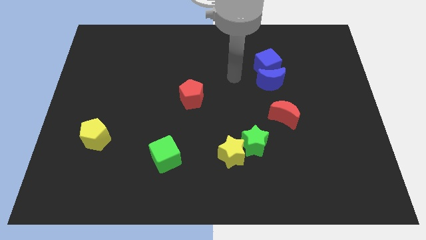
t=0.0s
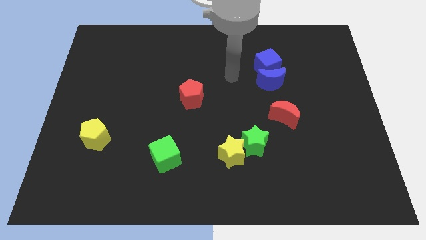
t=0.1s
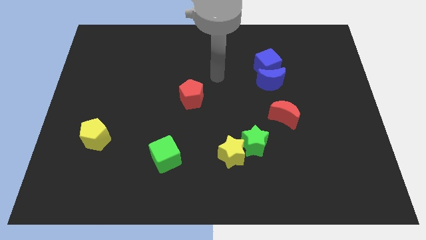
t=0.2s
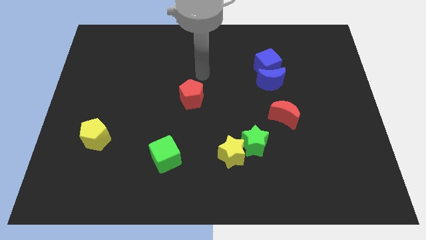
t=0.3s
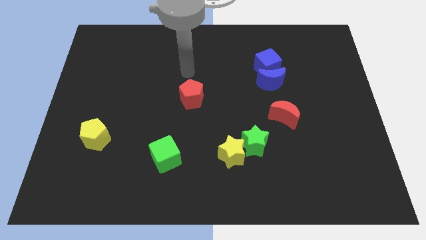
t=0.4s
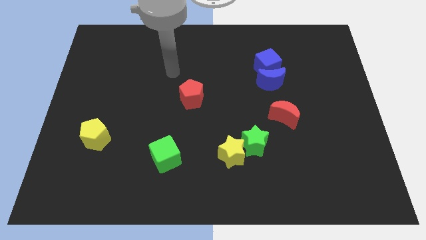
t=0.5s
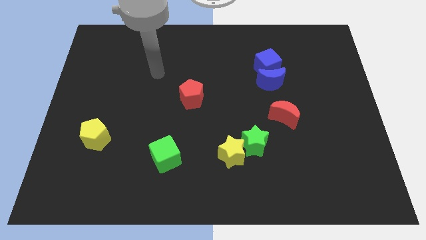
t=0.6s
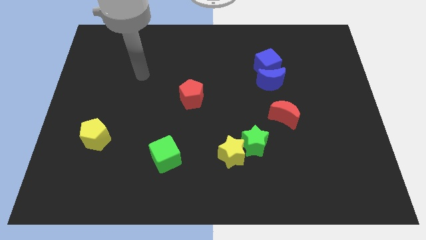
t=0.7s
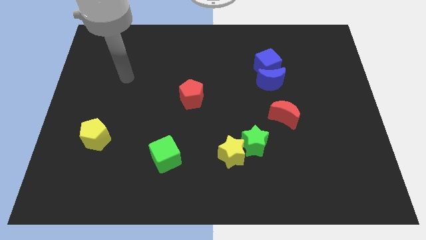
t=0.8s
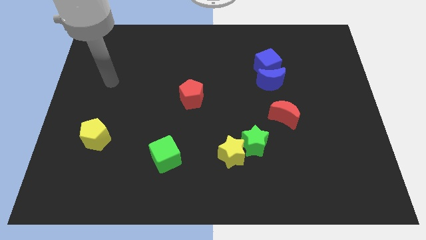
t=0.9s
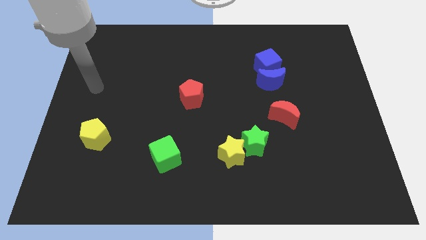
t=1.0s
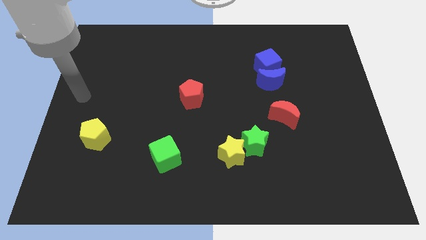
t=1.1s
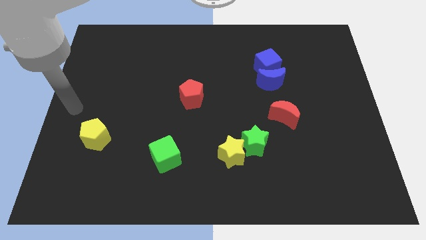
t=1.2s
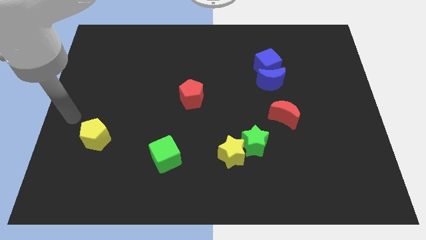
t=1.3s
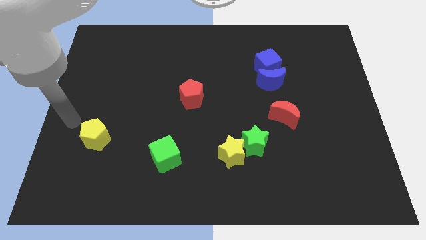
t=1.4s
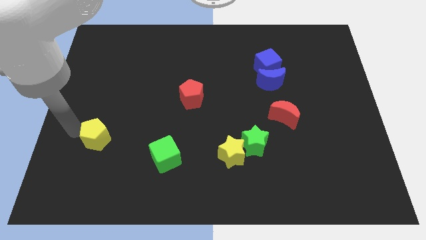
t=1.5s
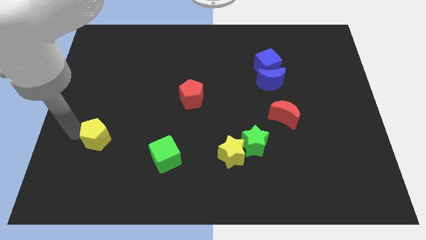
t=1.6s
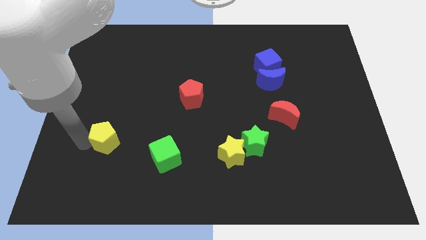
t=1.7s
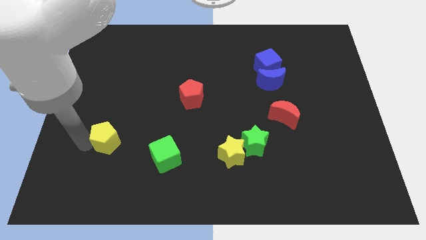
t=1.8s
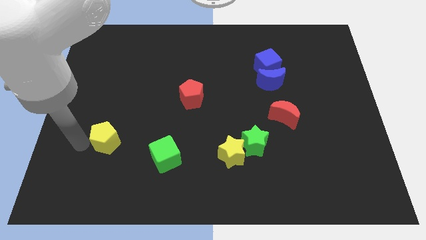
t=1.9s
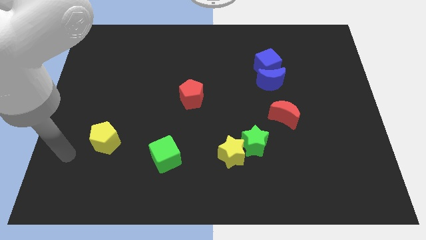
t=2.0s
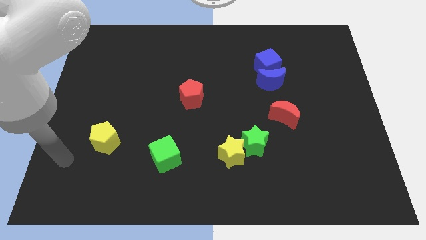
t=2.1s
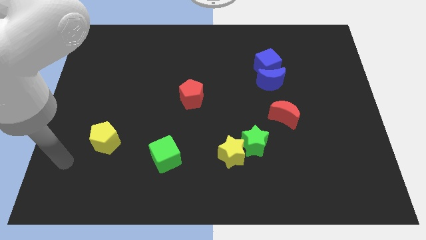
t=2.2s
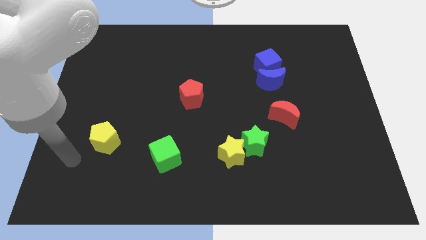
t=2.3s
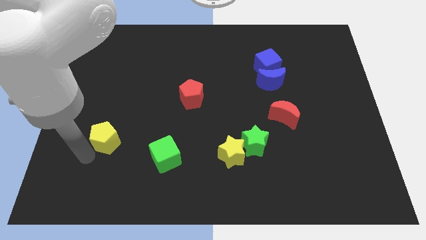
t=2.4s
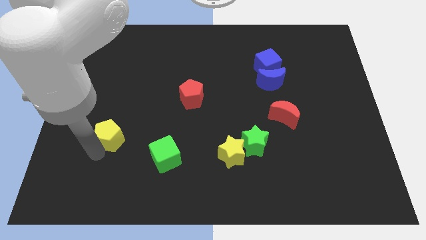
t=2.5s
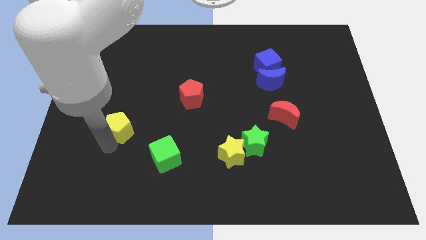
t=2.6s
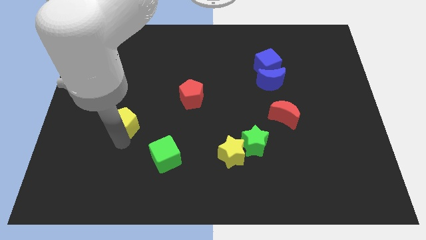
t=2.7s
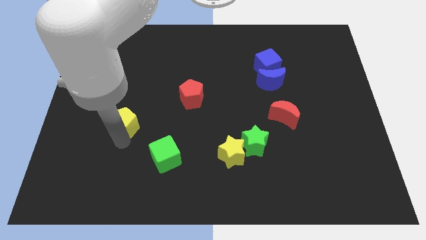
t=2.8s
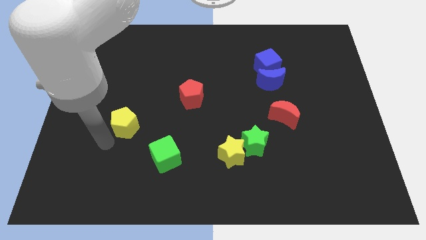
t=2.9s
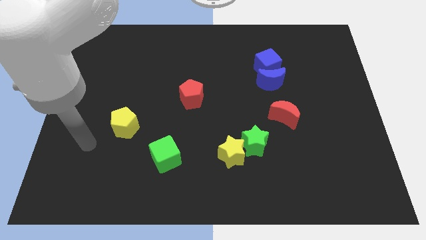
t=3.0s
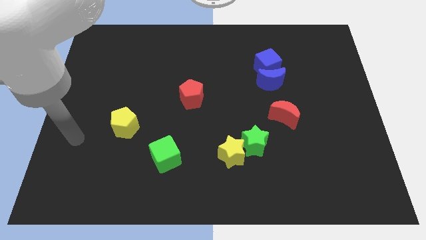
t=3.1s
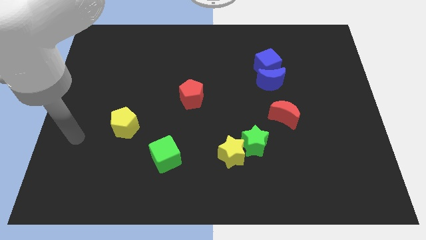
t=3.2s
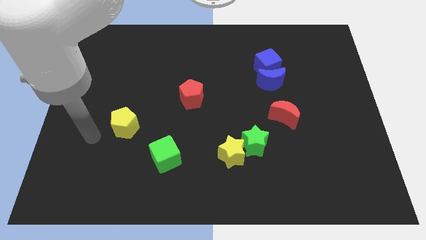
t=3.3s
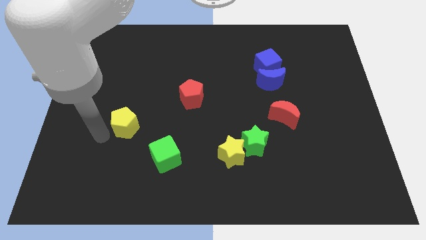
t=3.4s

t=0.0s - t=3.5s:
push yellow pentagon slightly to the right

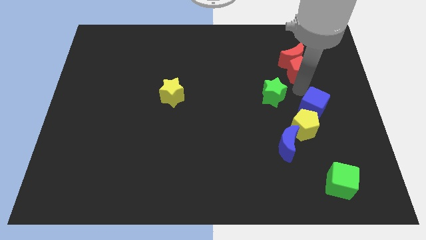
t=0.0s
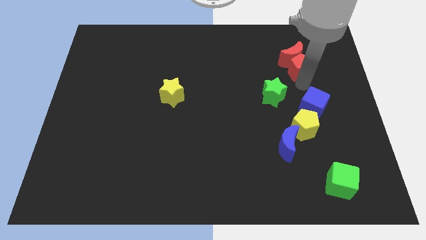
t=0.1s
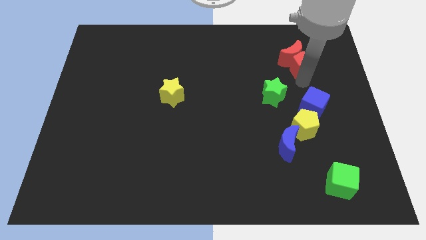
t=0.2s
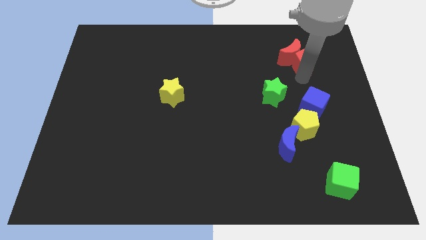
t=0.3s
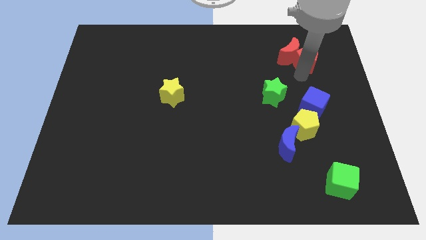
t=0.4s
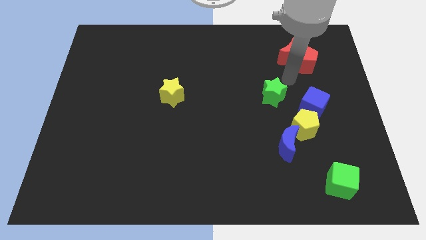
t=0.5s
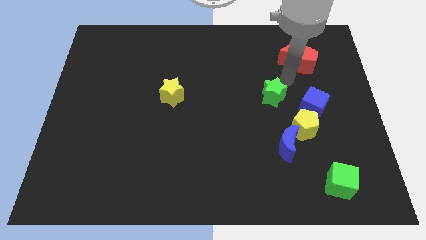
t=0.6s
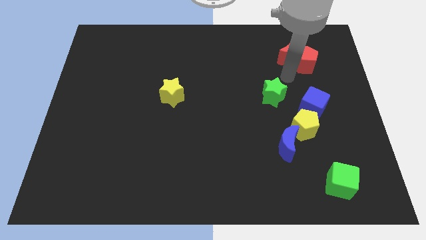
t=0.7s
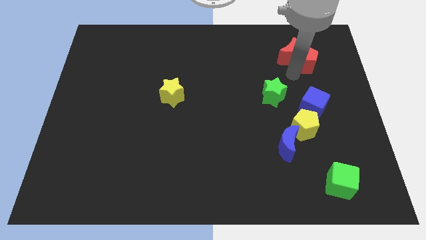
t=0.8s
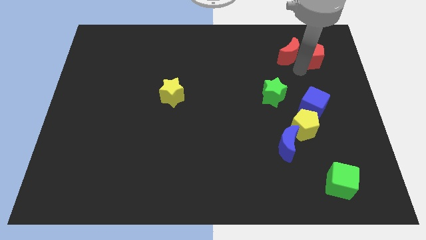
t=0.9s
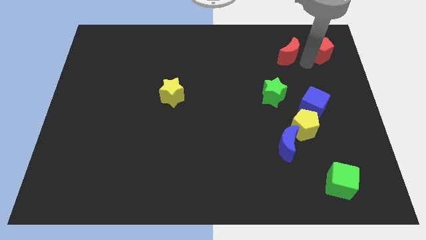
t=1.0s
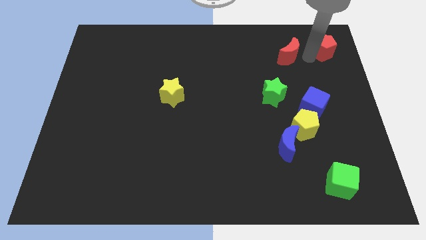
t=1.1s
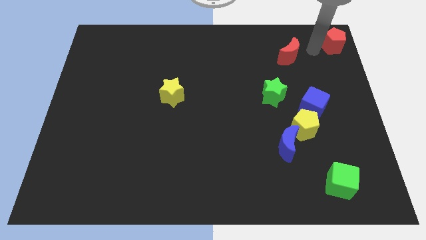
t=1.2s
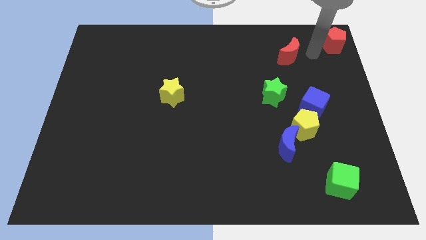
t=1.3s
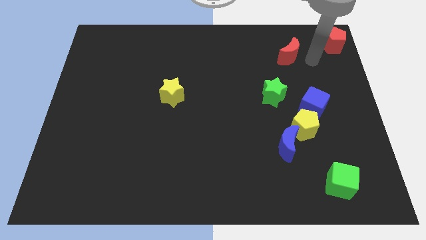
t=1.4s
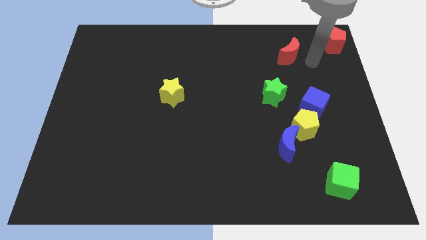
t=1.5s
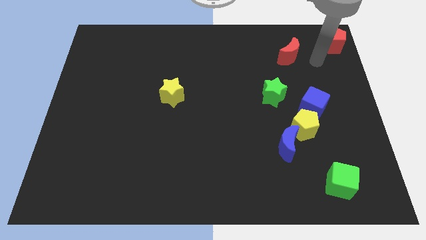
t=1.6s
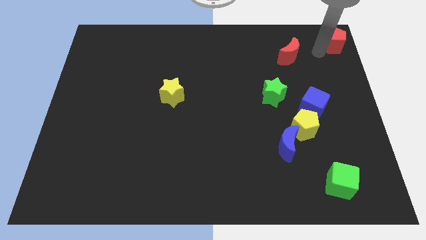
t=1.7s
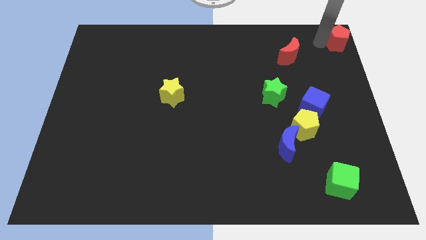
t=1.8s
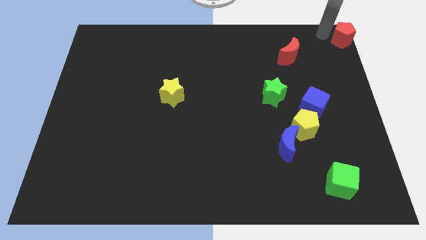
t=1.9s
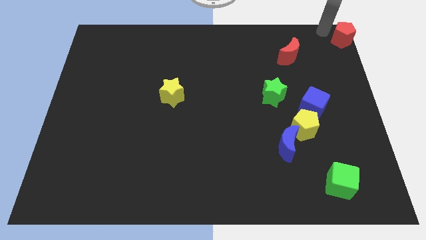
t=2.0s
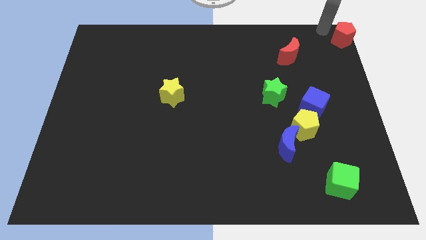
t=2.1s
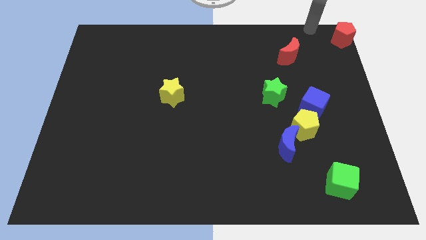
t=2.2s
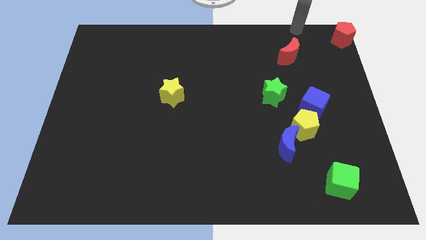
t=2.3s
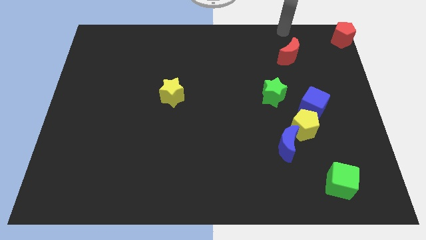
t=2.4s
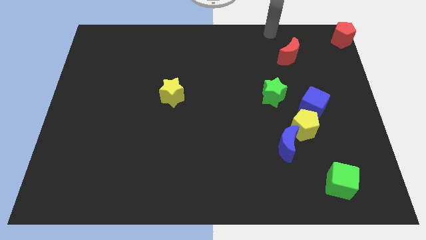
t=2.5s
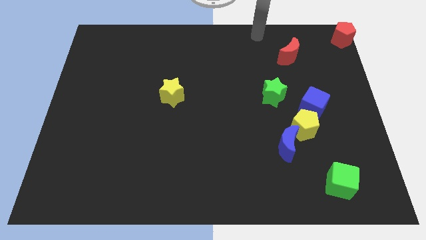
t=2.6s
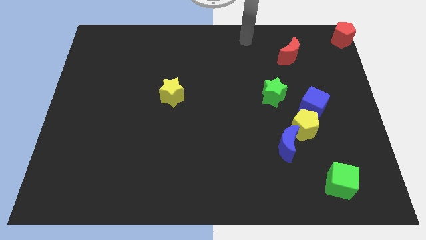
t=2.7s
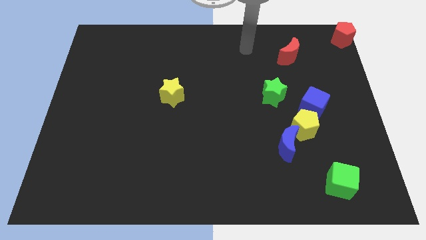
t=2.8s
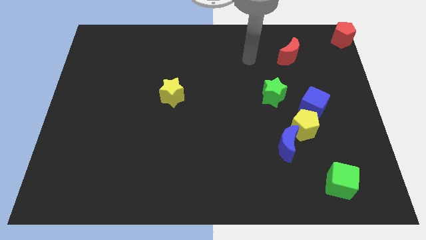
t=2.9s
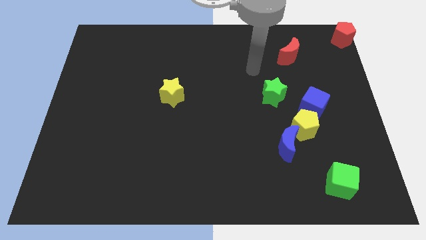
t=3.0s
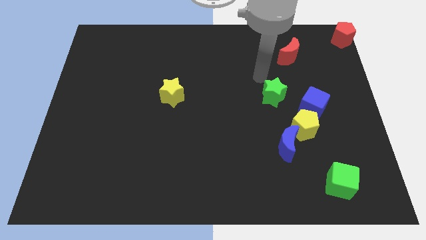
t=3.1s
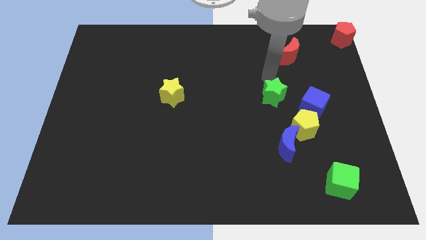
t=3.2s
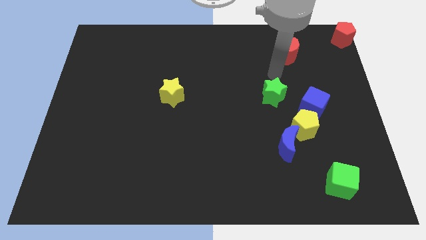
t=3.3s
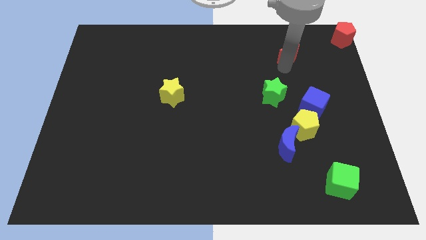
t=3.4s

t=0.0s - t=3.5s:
move the red pentagon to the top right of the board

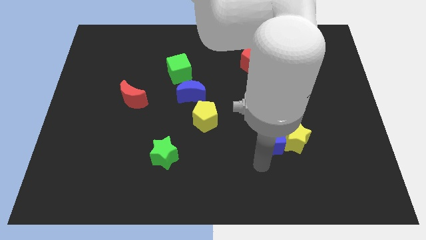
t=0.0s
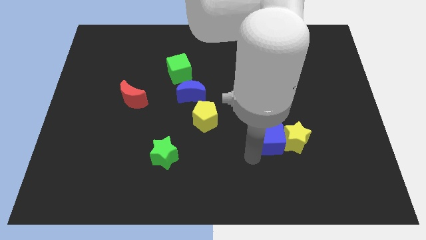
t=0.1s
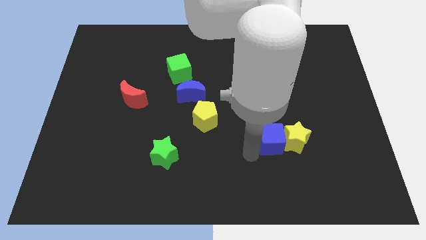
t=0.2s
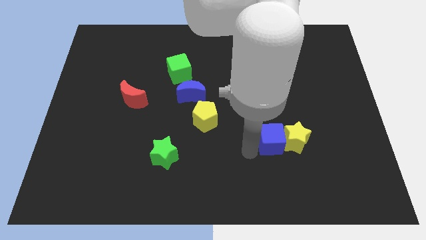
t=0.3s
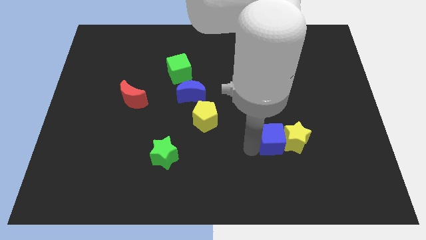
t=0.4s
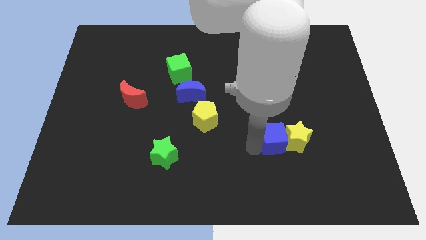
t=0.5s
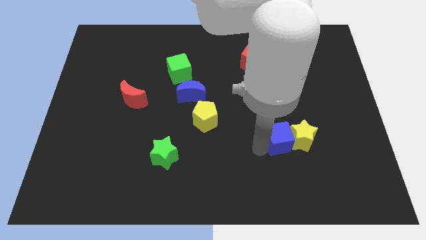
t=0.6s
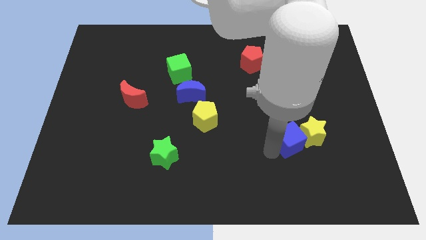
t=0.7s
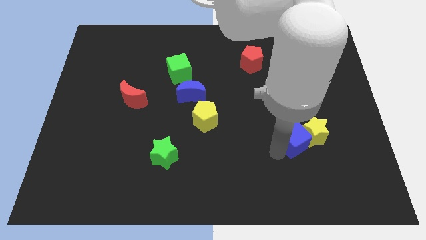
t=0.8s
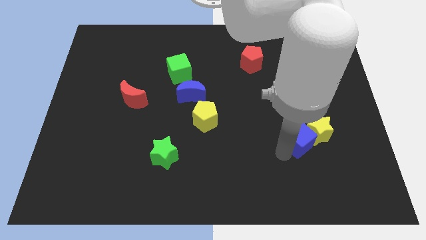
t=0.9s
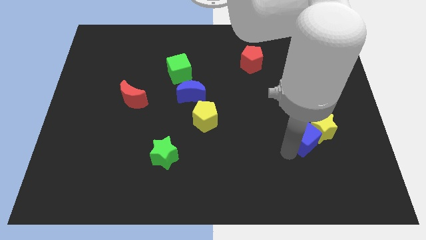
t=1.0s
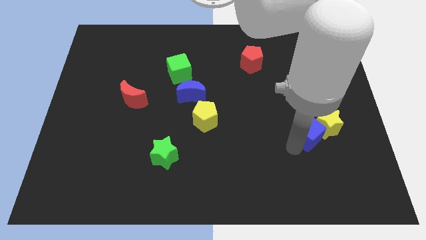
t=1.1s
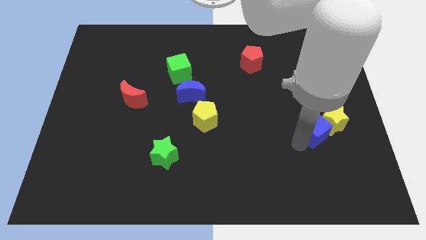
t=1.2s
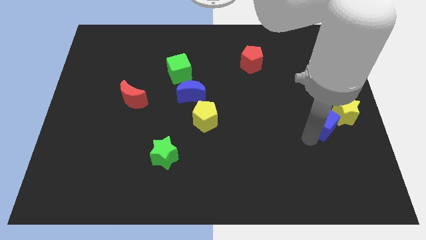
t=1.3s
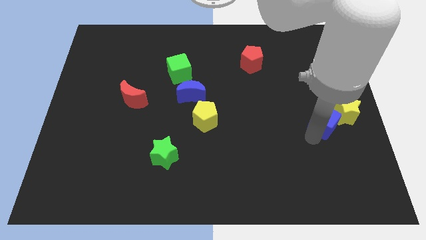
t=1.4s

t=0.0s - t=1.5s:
move the blue cube along with the yellow star towards the center right of the board

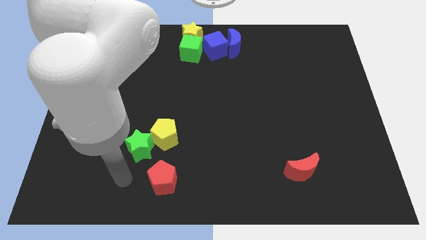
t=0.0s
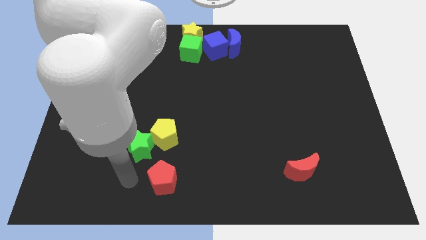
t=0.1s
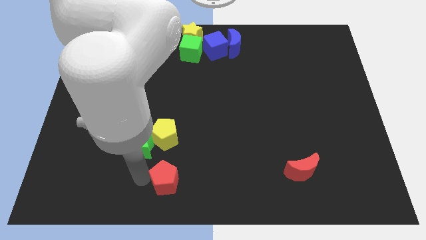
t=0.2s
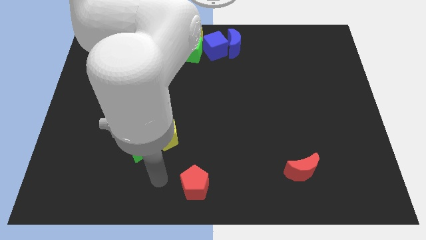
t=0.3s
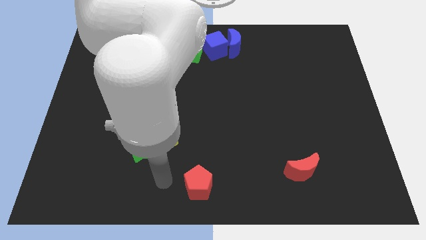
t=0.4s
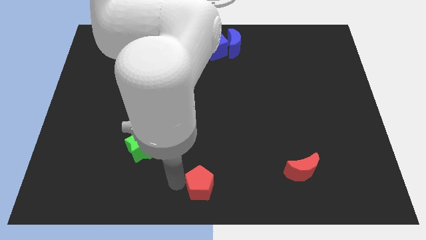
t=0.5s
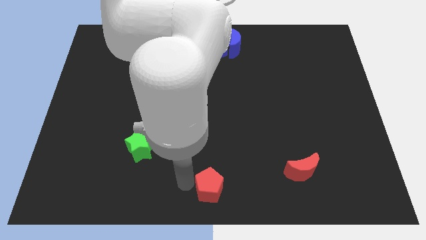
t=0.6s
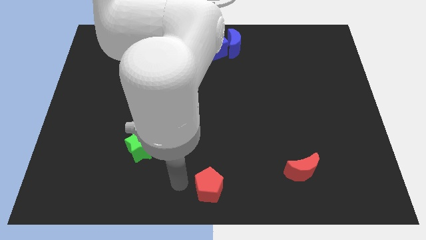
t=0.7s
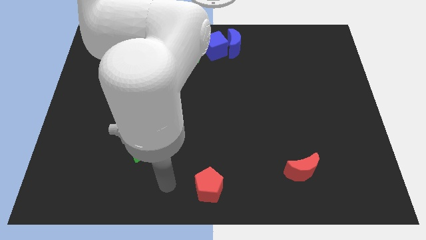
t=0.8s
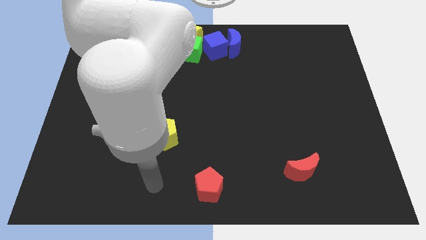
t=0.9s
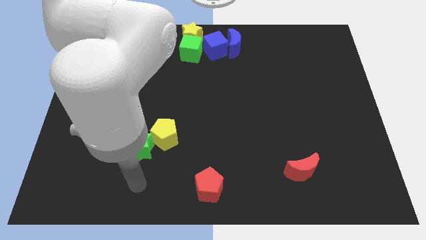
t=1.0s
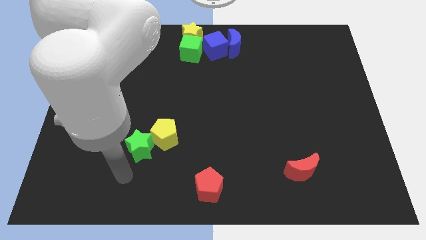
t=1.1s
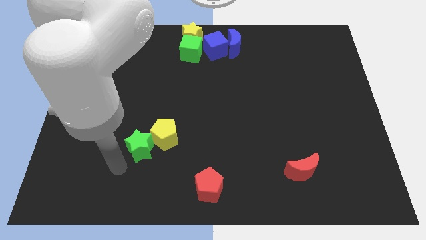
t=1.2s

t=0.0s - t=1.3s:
drag red pentagon towards right side of the board
